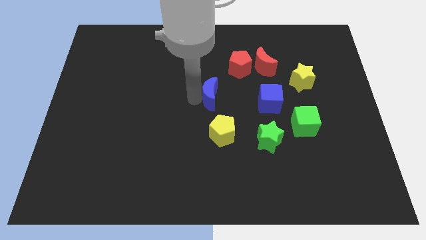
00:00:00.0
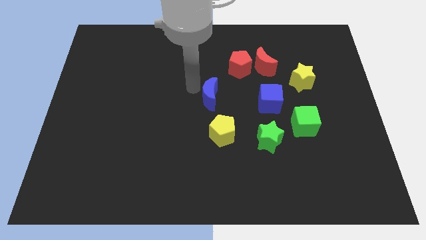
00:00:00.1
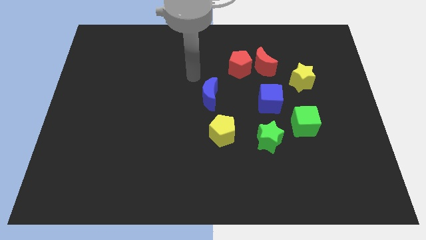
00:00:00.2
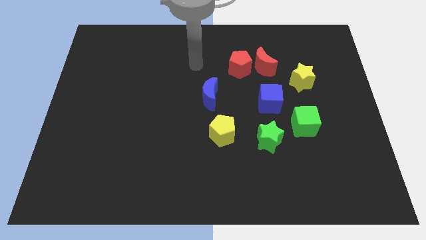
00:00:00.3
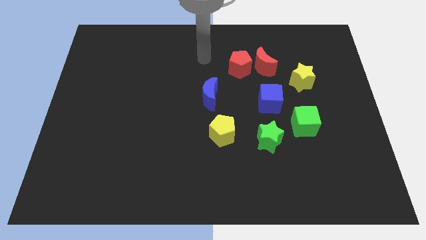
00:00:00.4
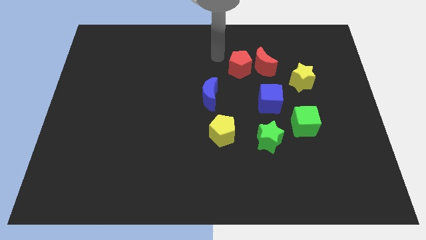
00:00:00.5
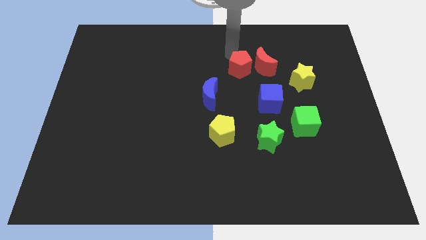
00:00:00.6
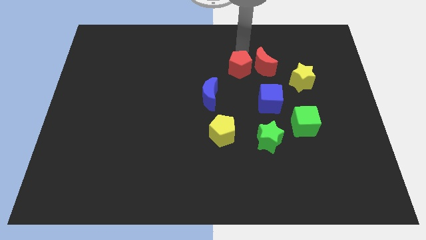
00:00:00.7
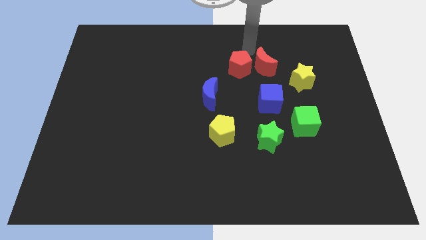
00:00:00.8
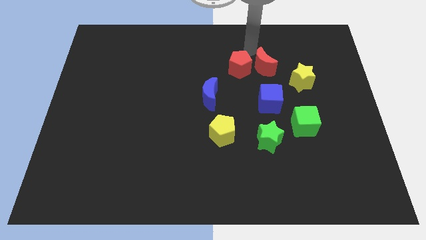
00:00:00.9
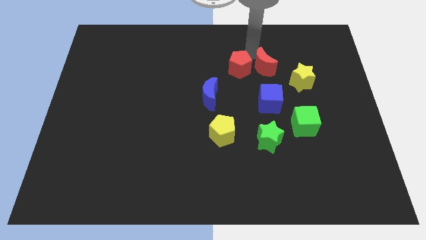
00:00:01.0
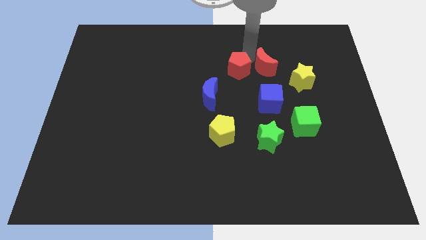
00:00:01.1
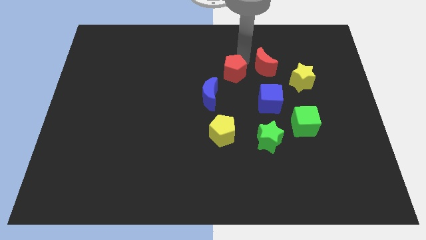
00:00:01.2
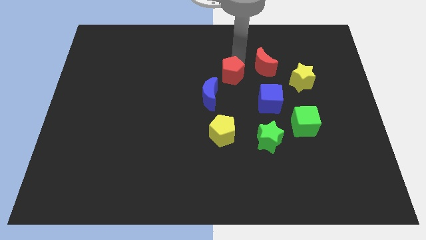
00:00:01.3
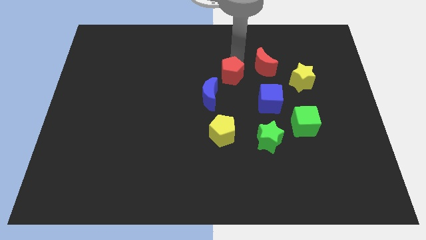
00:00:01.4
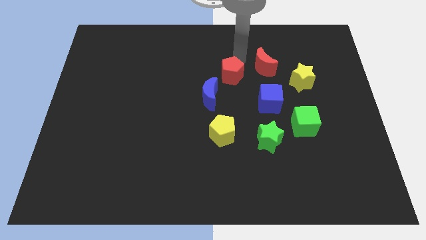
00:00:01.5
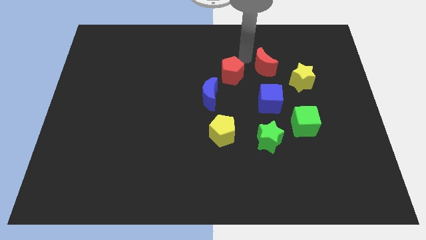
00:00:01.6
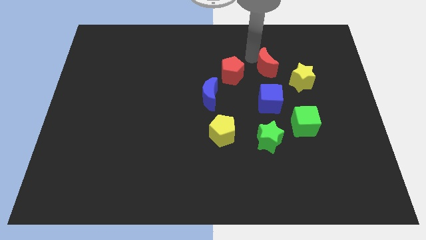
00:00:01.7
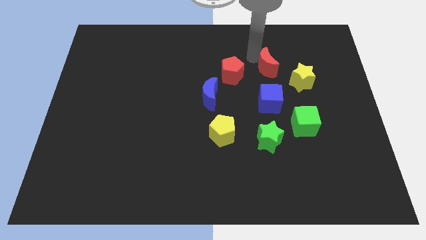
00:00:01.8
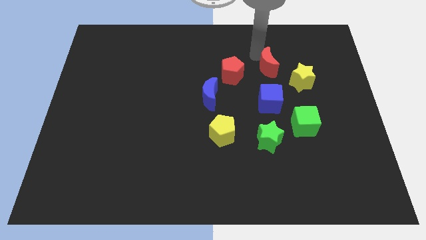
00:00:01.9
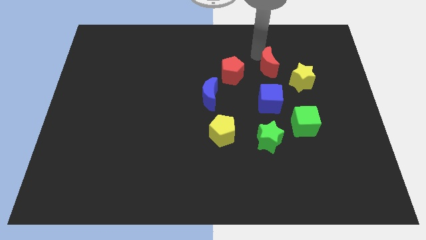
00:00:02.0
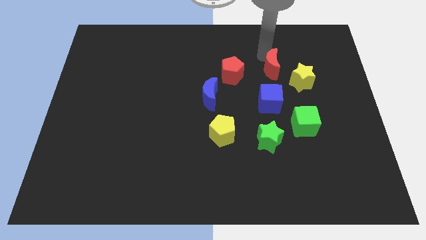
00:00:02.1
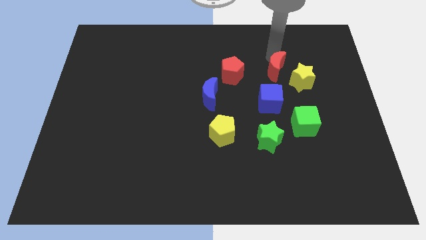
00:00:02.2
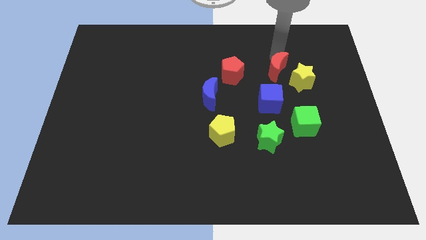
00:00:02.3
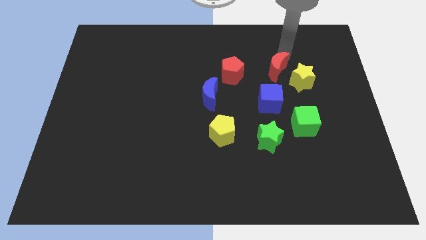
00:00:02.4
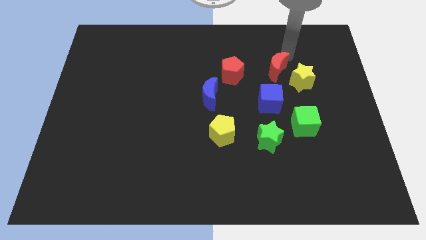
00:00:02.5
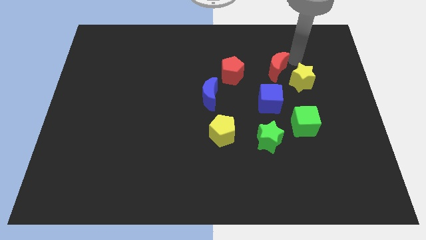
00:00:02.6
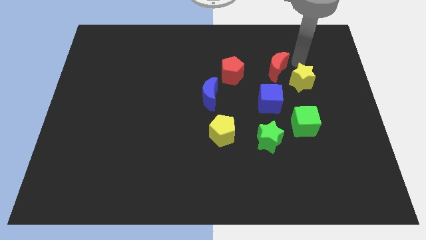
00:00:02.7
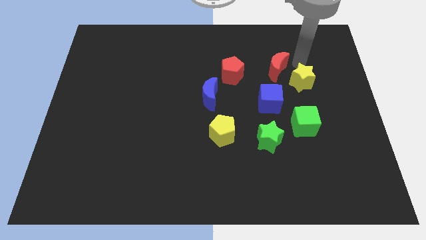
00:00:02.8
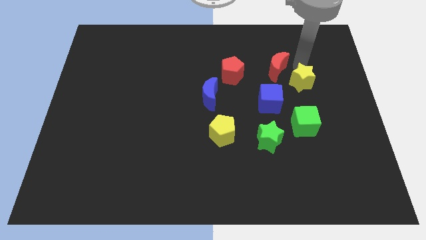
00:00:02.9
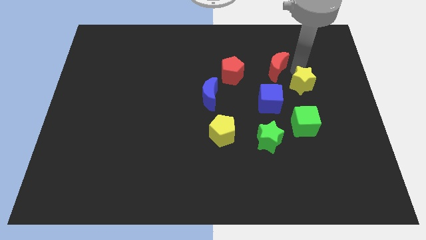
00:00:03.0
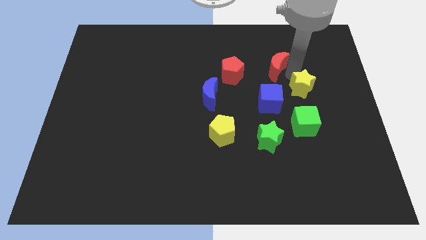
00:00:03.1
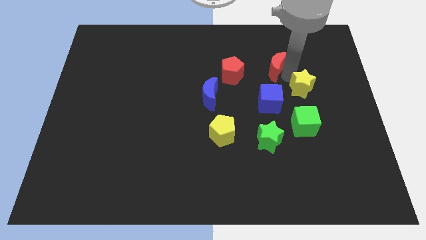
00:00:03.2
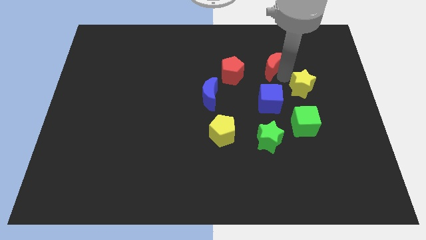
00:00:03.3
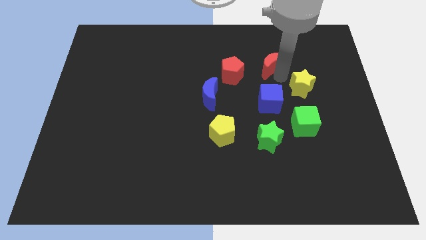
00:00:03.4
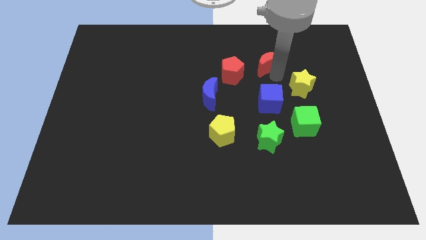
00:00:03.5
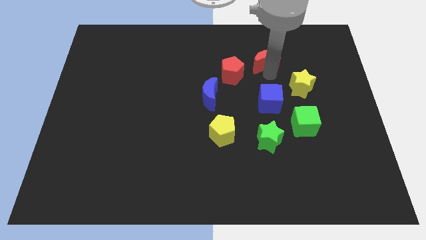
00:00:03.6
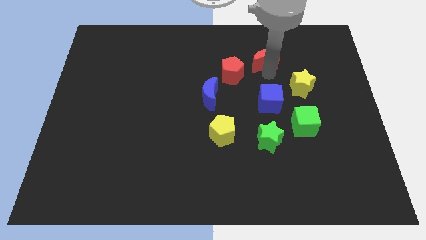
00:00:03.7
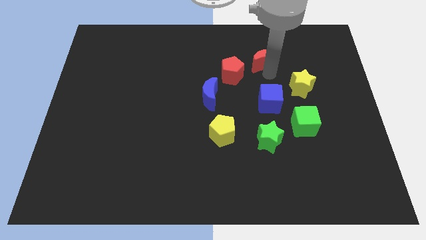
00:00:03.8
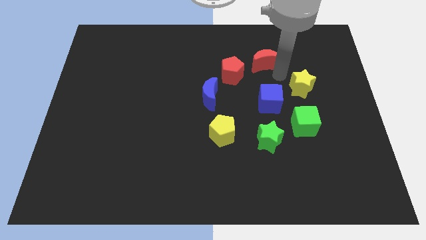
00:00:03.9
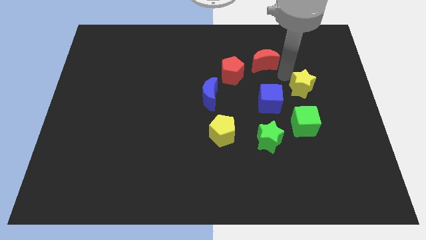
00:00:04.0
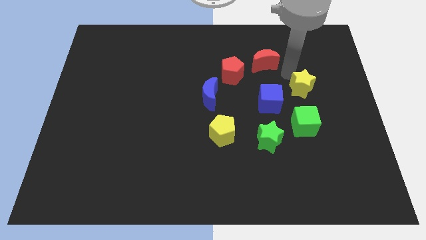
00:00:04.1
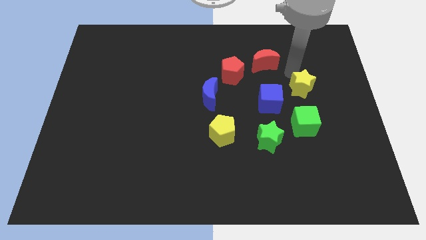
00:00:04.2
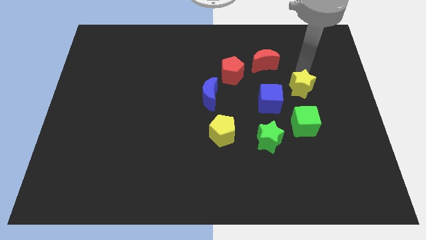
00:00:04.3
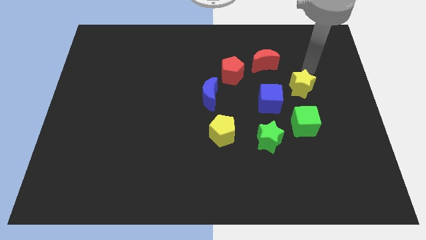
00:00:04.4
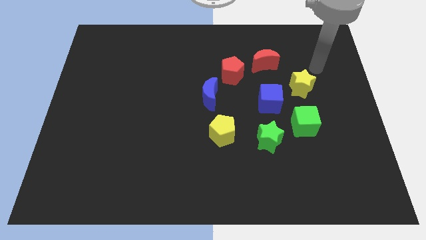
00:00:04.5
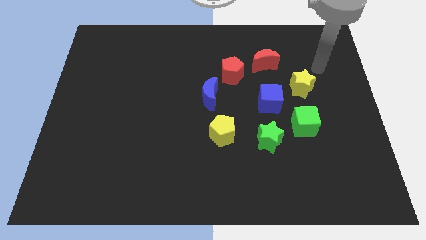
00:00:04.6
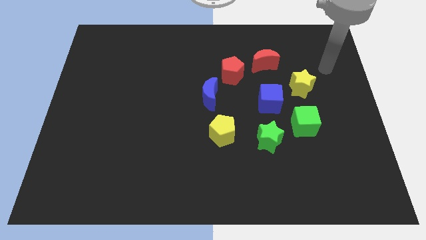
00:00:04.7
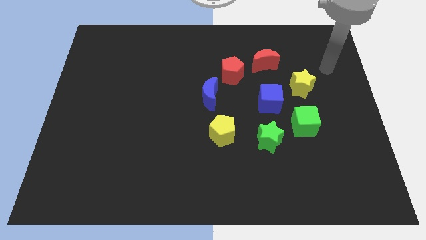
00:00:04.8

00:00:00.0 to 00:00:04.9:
adjust the group of blocks to make a circle

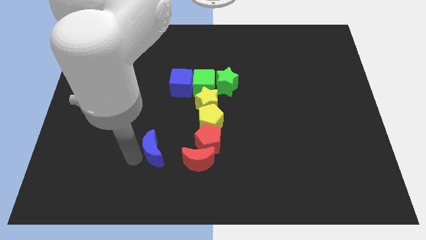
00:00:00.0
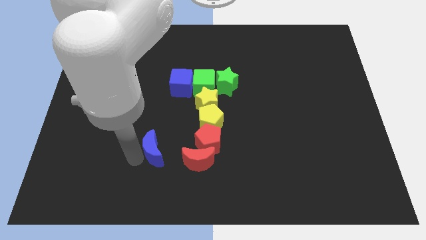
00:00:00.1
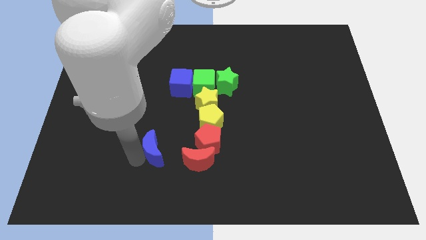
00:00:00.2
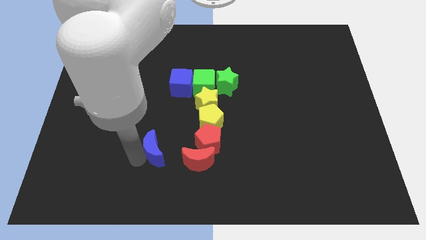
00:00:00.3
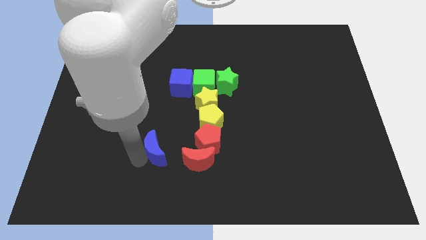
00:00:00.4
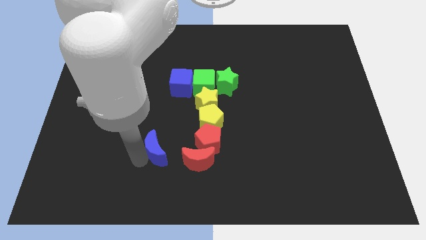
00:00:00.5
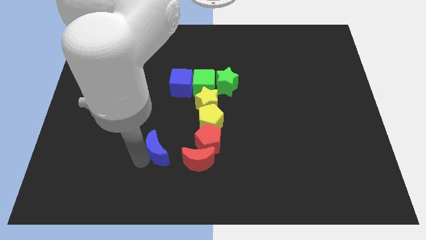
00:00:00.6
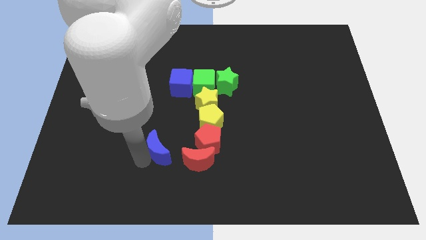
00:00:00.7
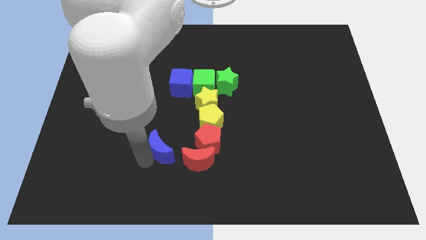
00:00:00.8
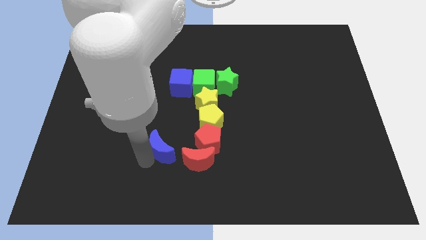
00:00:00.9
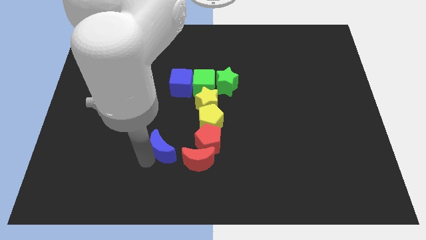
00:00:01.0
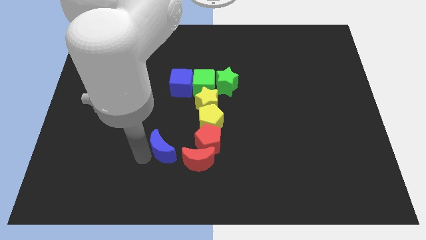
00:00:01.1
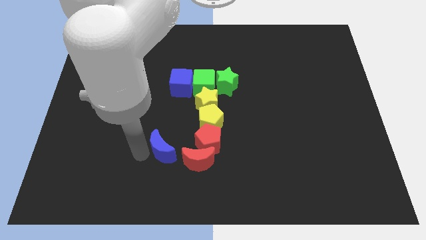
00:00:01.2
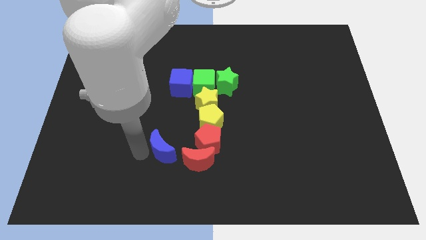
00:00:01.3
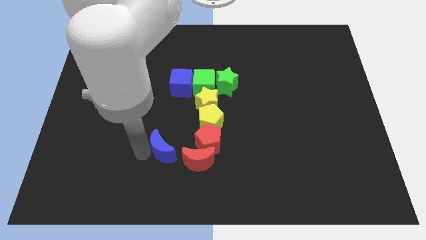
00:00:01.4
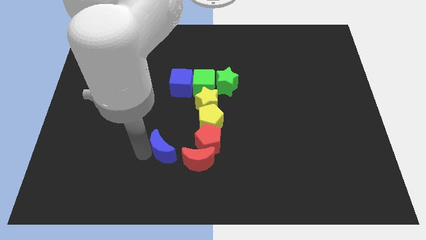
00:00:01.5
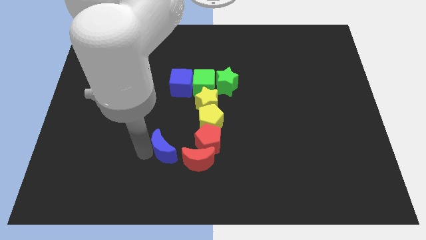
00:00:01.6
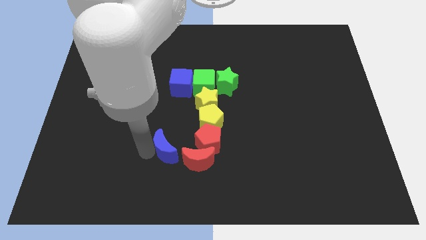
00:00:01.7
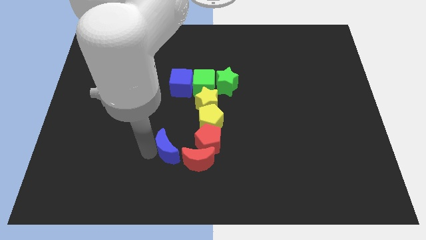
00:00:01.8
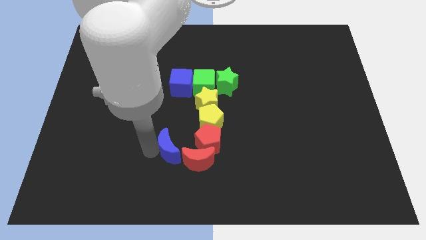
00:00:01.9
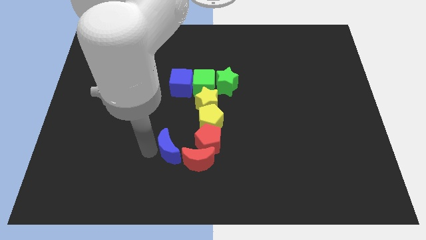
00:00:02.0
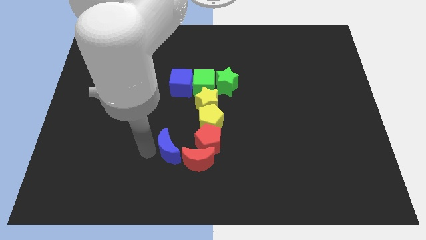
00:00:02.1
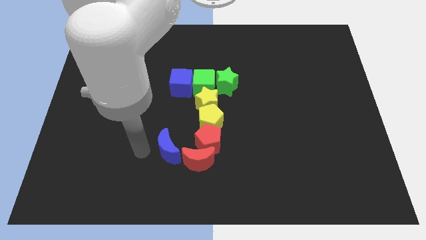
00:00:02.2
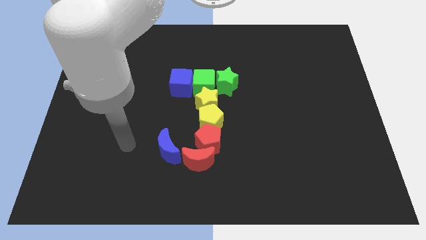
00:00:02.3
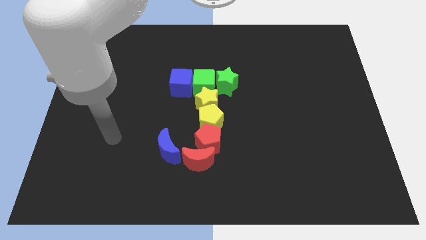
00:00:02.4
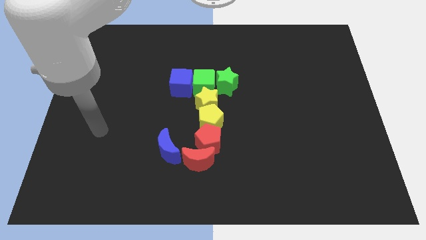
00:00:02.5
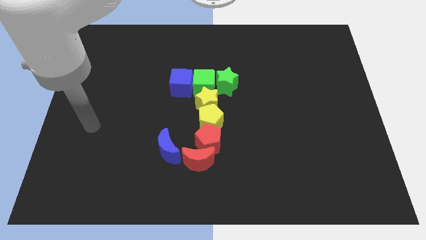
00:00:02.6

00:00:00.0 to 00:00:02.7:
move the blue moon close to the red moon

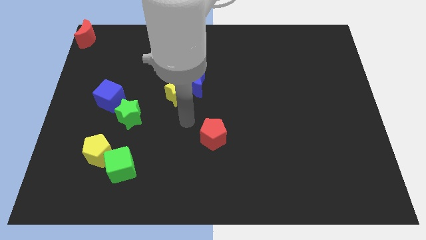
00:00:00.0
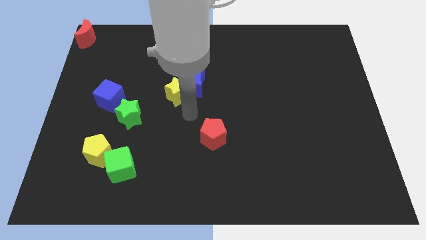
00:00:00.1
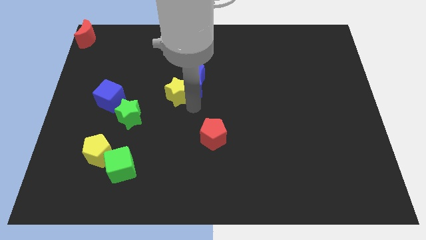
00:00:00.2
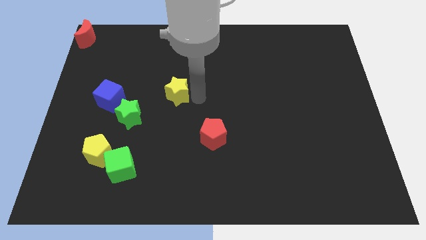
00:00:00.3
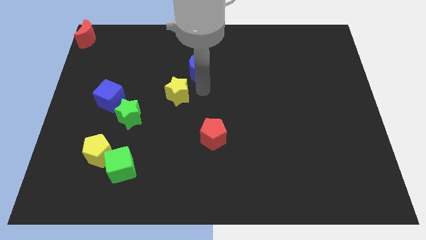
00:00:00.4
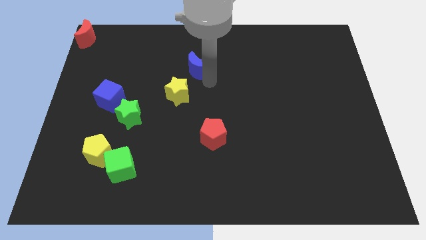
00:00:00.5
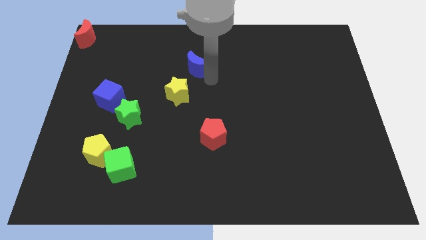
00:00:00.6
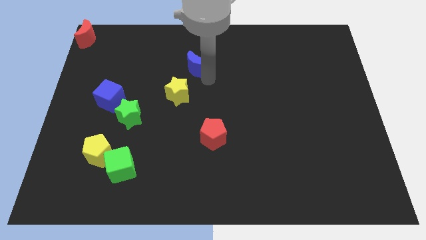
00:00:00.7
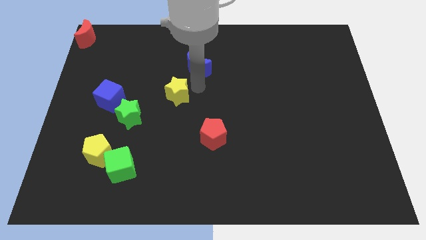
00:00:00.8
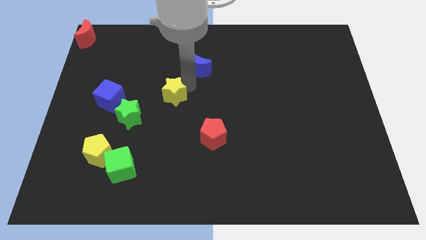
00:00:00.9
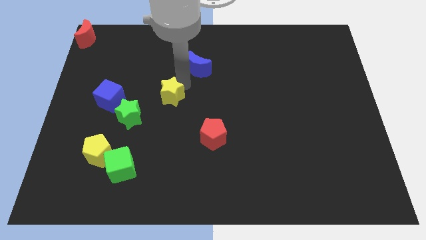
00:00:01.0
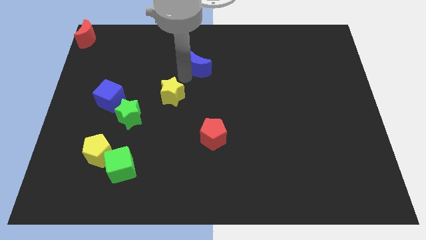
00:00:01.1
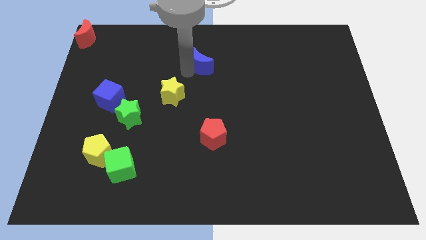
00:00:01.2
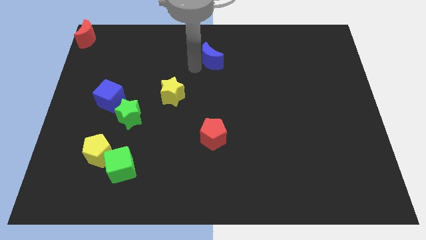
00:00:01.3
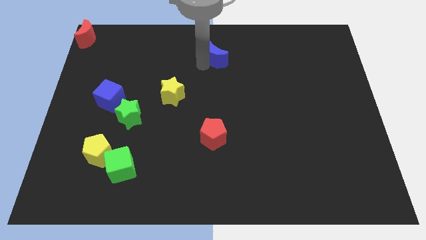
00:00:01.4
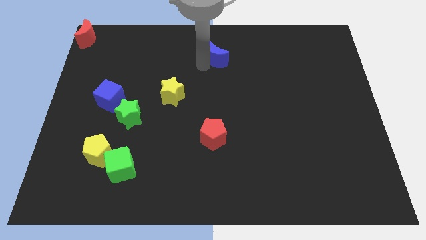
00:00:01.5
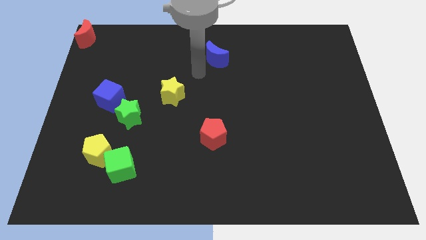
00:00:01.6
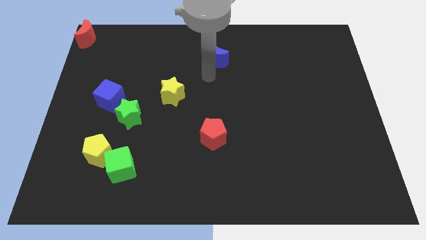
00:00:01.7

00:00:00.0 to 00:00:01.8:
separate the blue crescent from the yellow star
